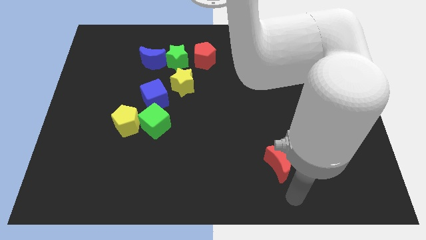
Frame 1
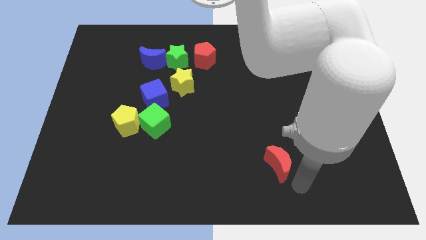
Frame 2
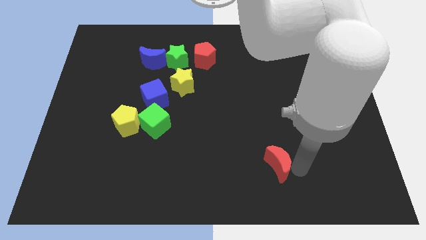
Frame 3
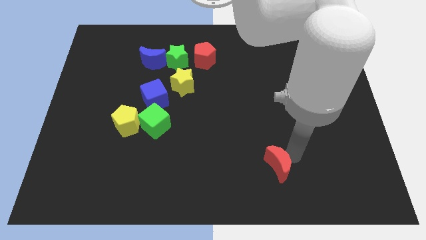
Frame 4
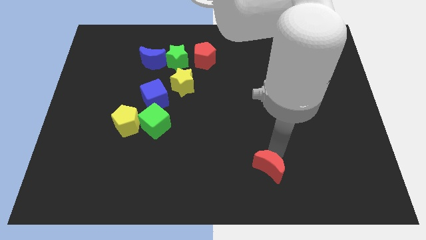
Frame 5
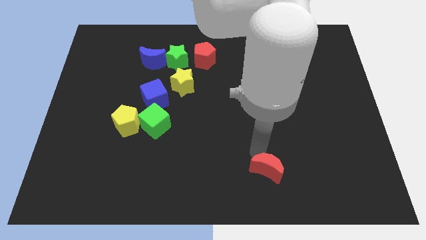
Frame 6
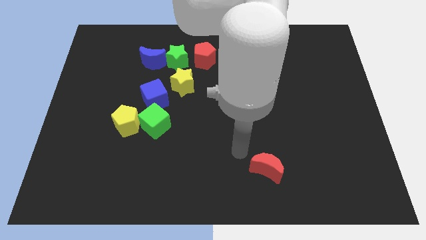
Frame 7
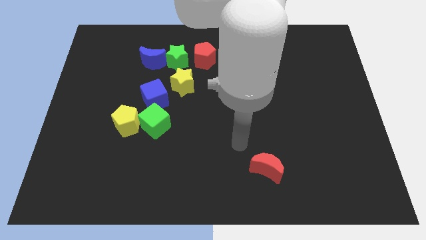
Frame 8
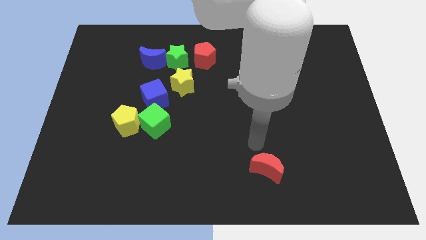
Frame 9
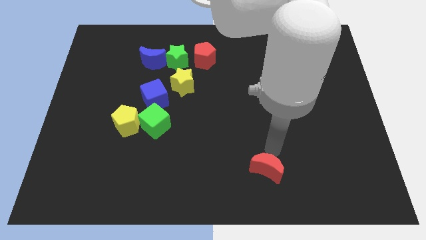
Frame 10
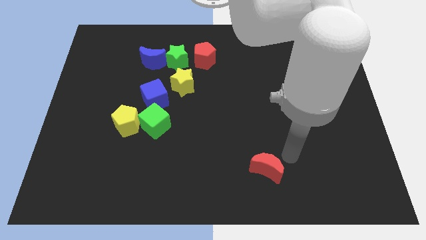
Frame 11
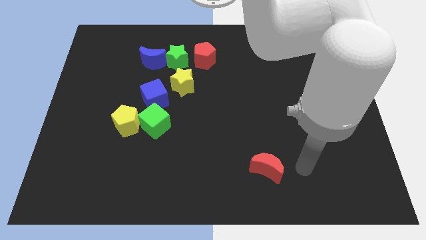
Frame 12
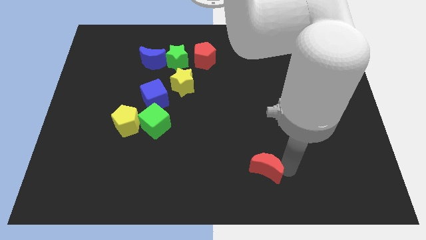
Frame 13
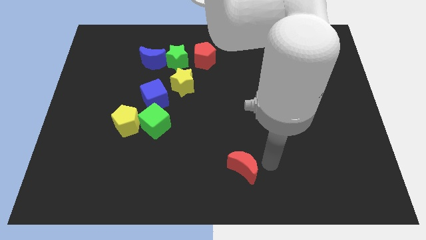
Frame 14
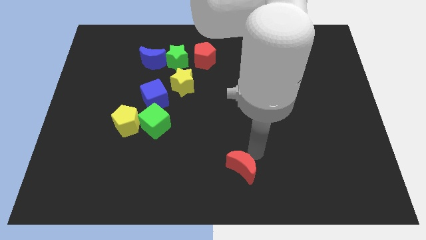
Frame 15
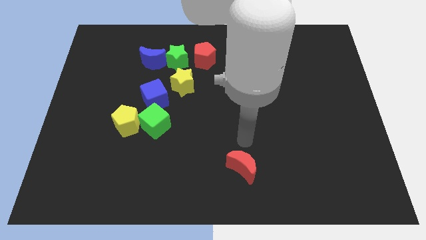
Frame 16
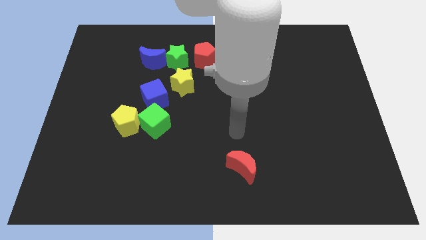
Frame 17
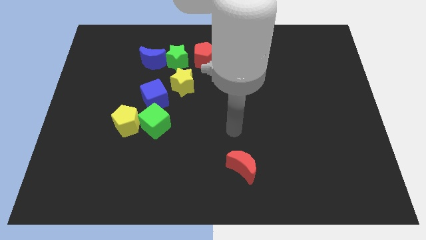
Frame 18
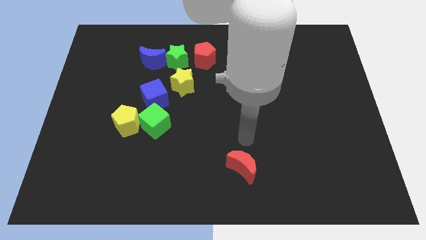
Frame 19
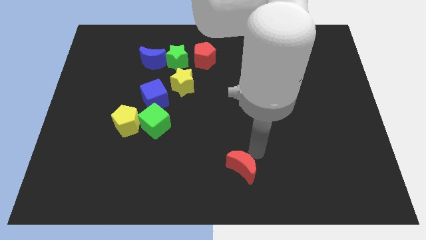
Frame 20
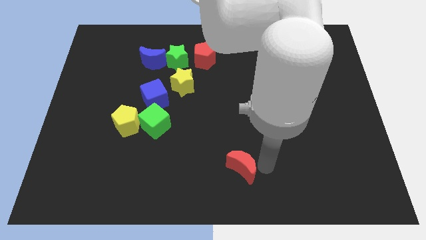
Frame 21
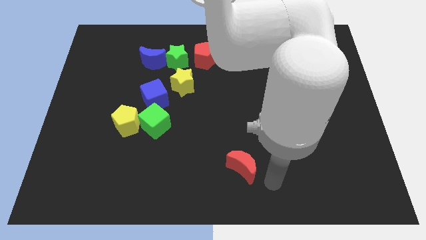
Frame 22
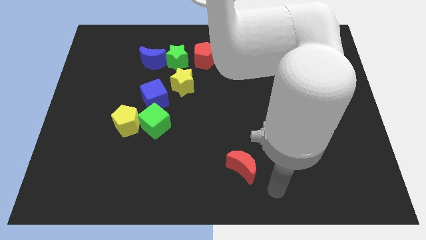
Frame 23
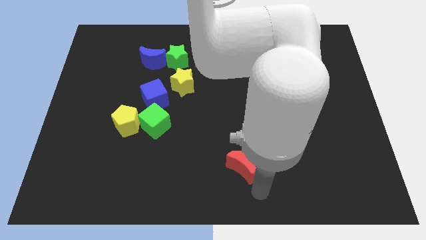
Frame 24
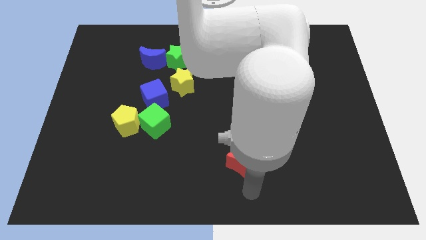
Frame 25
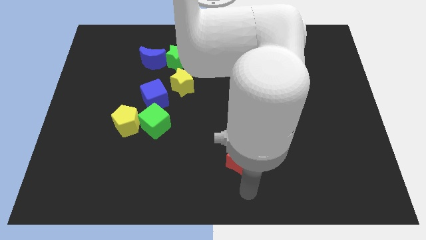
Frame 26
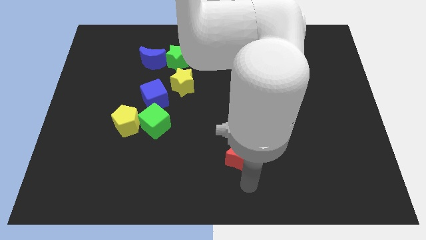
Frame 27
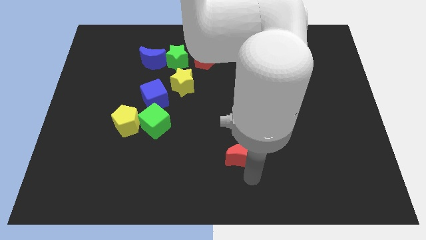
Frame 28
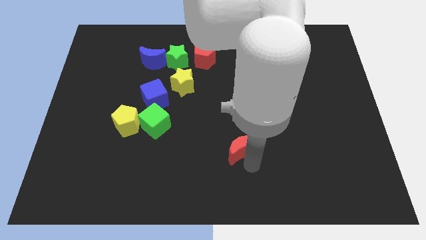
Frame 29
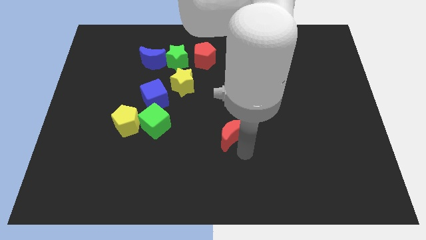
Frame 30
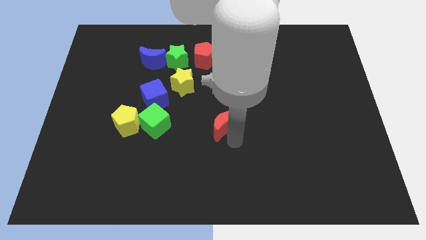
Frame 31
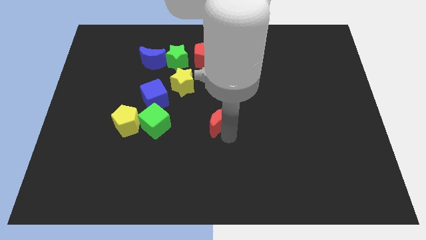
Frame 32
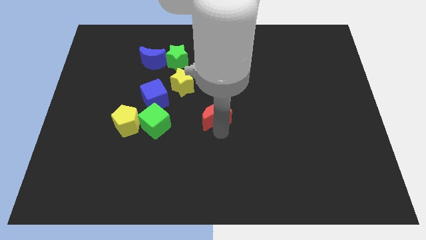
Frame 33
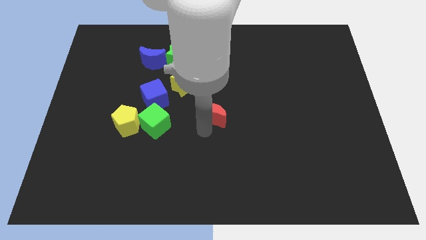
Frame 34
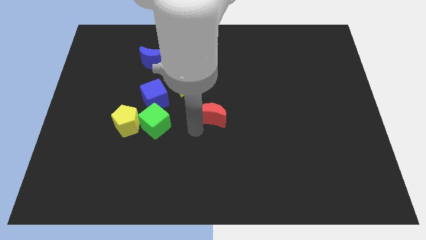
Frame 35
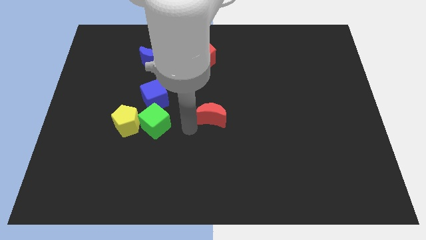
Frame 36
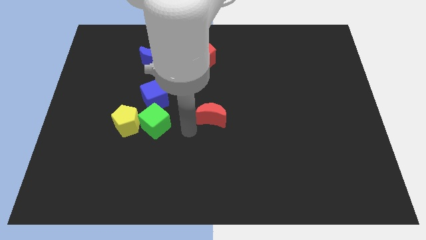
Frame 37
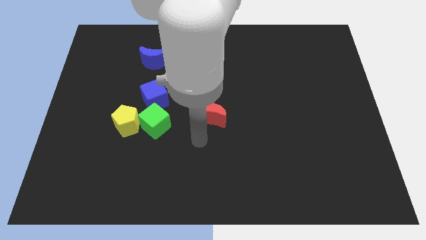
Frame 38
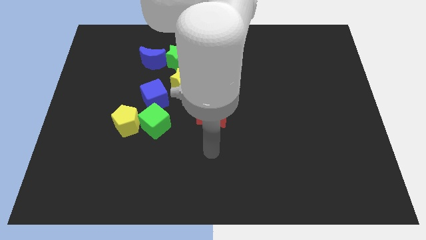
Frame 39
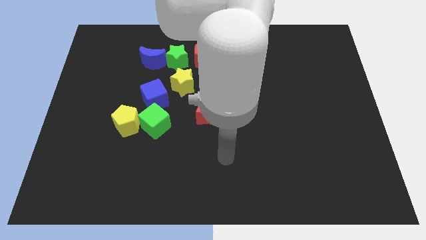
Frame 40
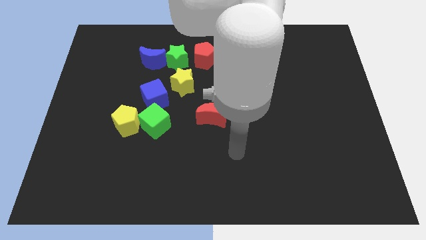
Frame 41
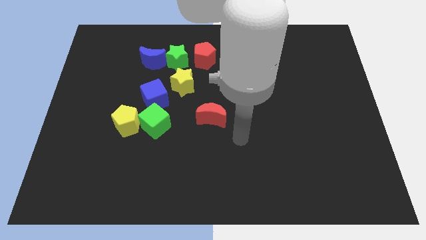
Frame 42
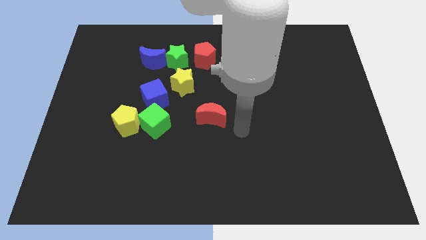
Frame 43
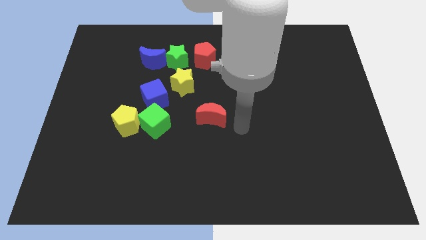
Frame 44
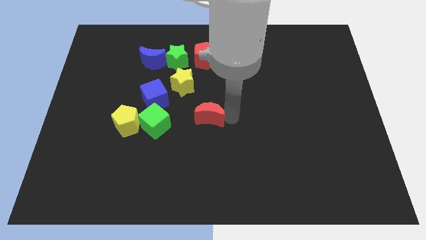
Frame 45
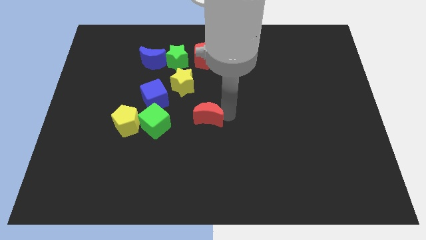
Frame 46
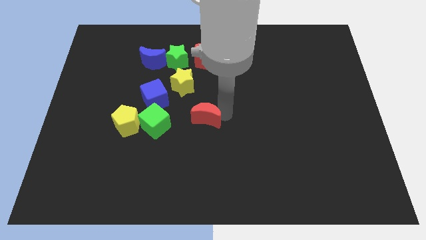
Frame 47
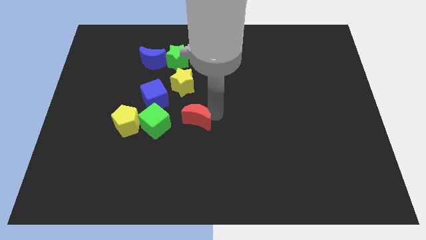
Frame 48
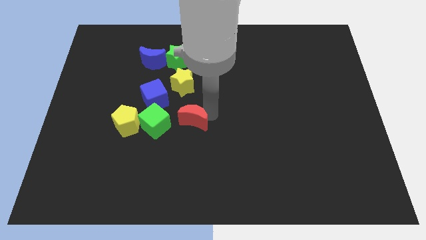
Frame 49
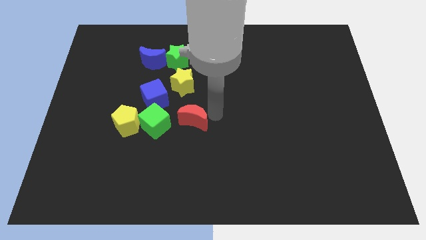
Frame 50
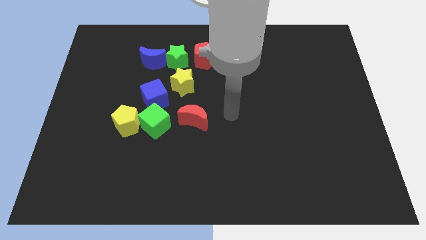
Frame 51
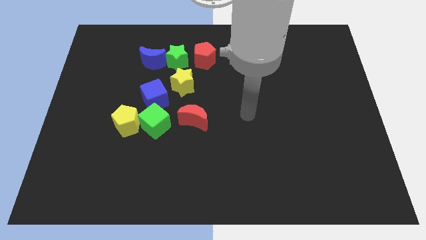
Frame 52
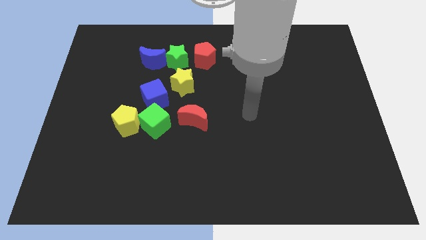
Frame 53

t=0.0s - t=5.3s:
push the red crescent to the right of the green cube

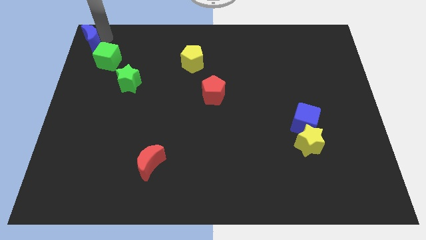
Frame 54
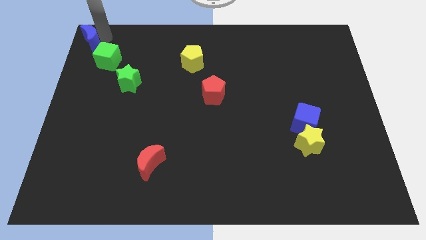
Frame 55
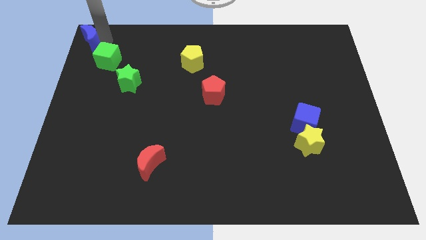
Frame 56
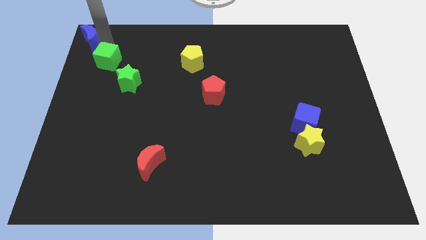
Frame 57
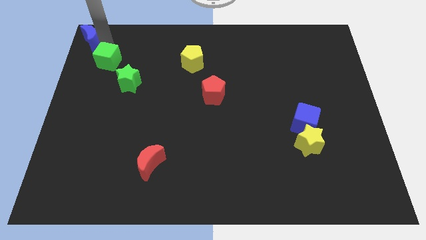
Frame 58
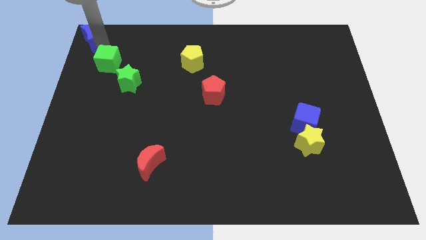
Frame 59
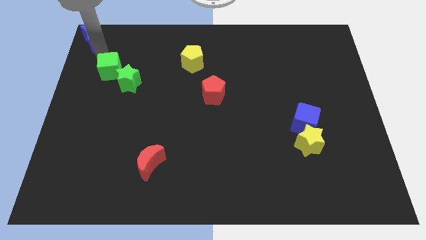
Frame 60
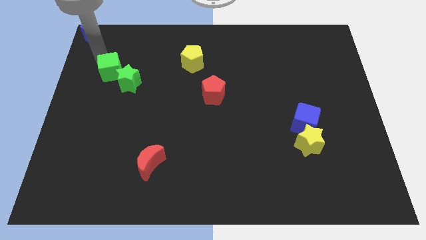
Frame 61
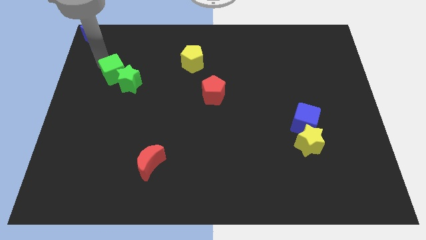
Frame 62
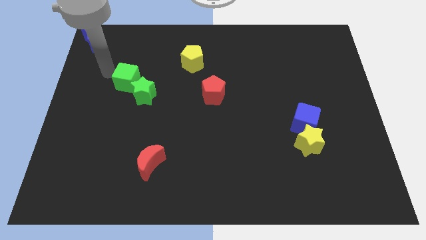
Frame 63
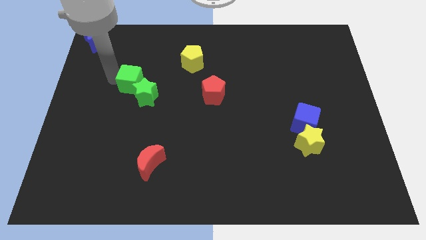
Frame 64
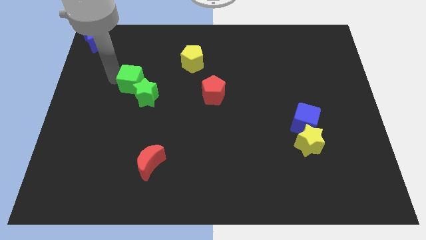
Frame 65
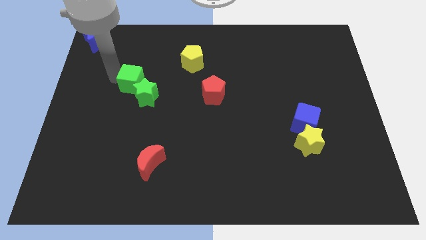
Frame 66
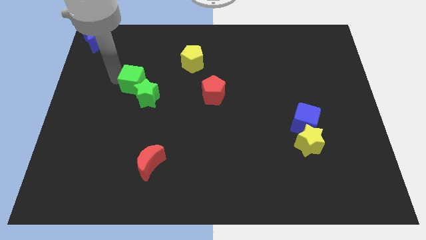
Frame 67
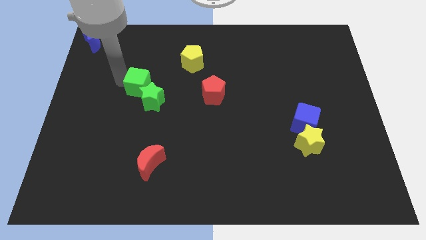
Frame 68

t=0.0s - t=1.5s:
move the green cube into the left side of the green star

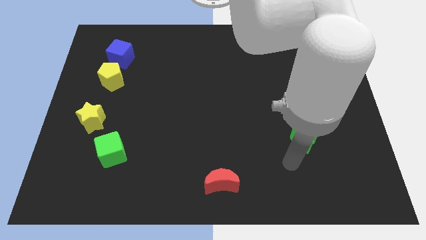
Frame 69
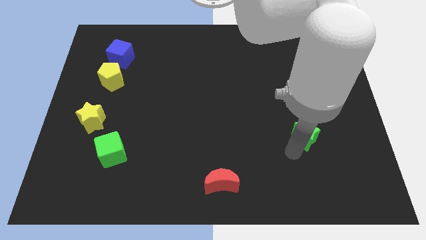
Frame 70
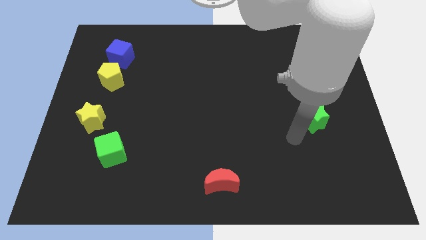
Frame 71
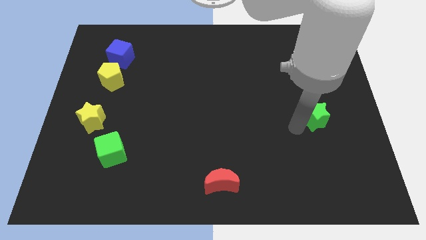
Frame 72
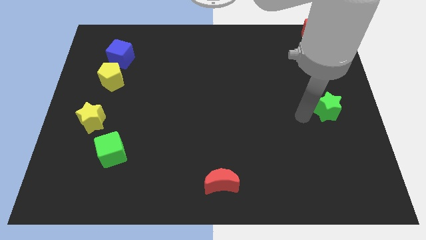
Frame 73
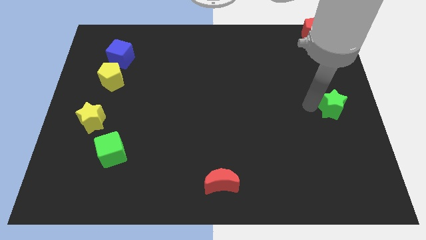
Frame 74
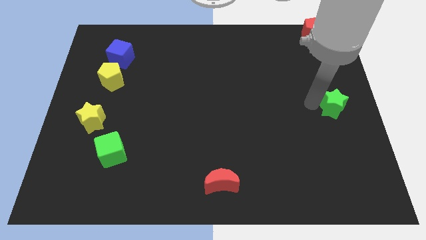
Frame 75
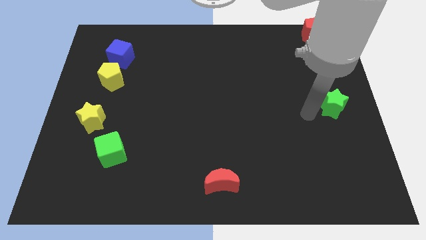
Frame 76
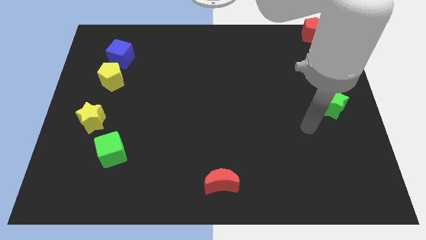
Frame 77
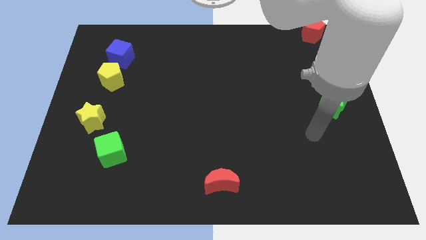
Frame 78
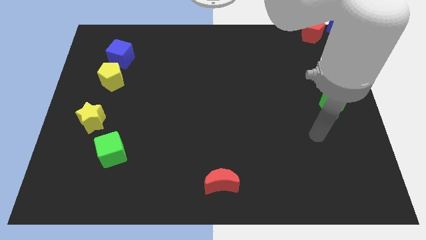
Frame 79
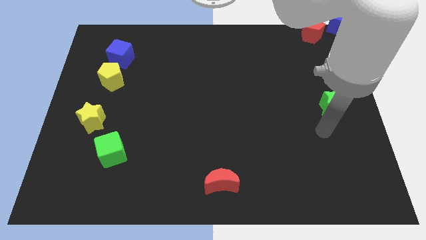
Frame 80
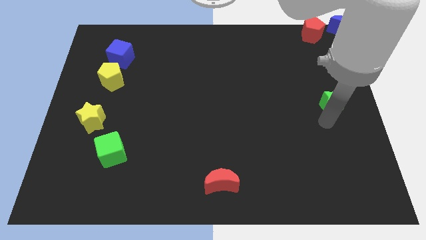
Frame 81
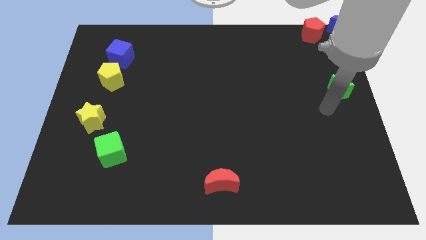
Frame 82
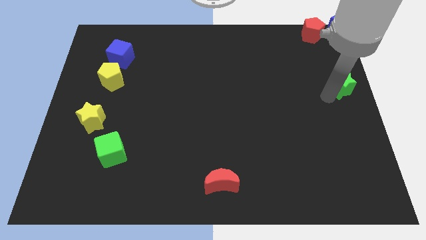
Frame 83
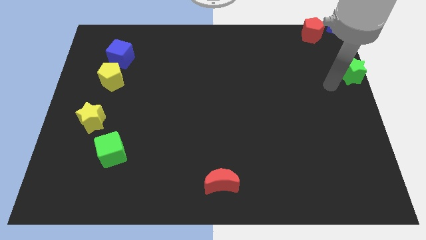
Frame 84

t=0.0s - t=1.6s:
put the green star vertically below the blue moon

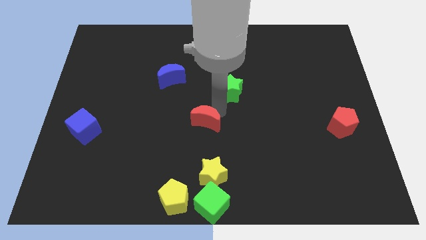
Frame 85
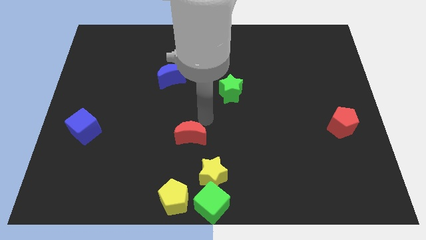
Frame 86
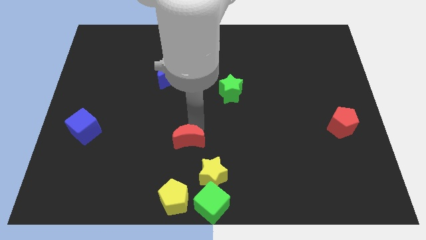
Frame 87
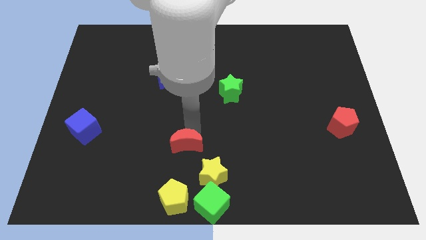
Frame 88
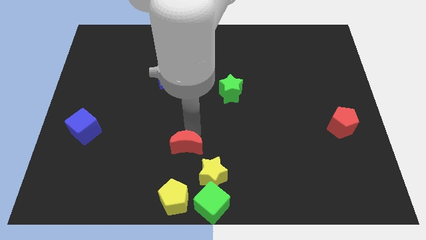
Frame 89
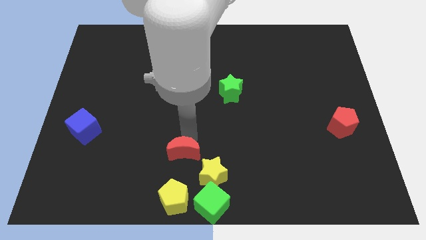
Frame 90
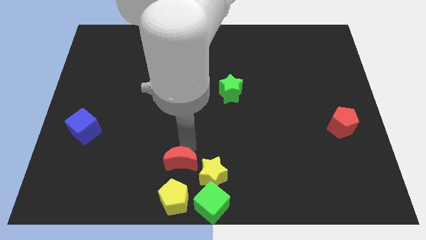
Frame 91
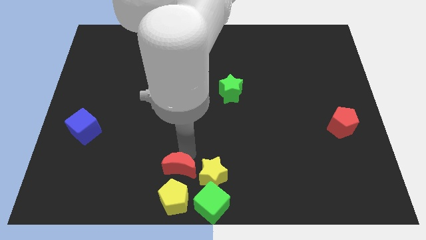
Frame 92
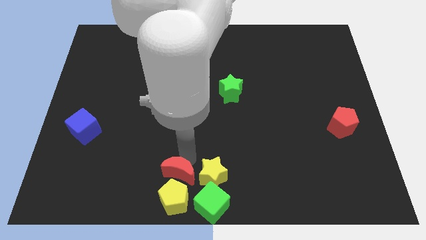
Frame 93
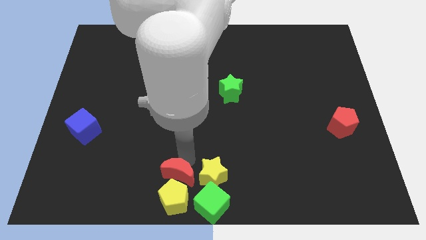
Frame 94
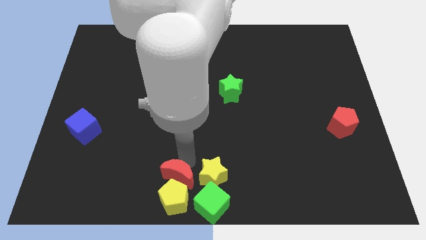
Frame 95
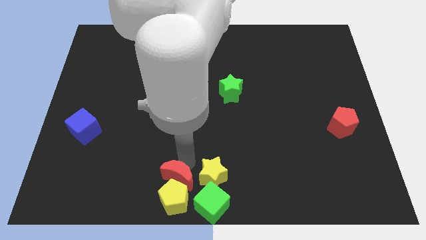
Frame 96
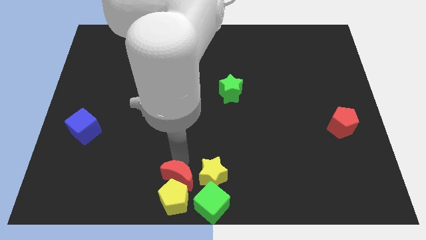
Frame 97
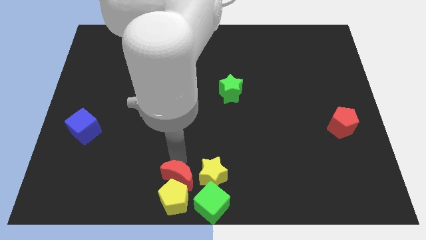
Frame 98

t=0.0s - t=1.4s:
move the red crescent to the left side of the yellow star
